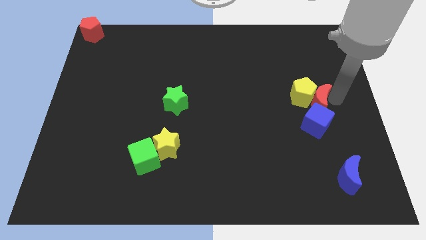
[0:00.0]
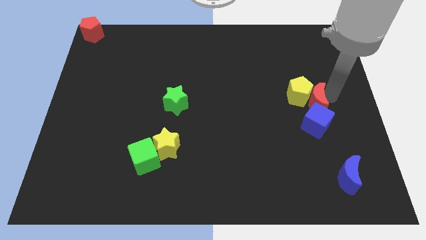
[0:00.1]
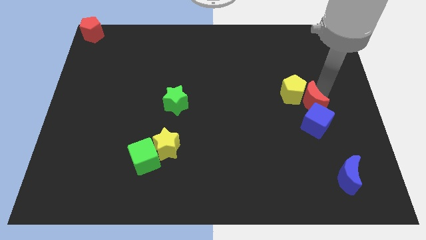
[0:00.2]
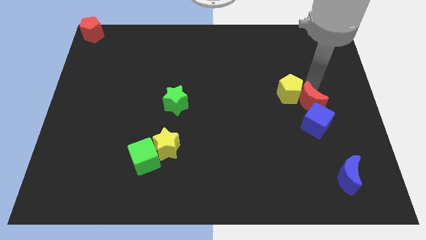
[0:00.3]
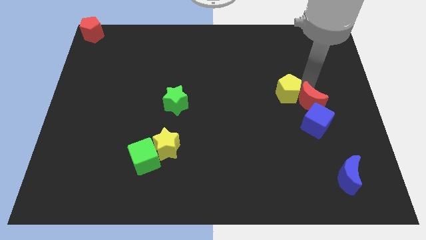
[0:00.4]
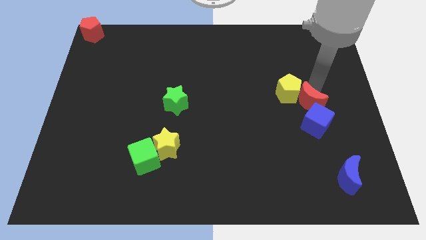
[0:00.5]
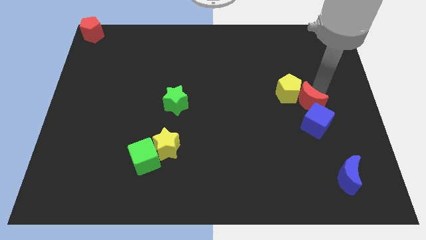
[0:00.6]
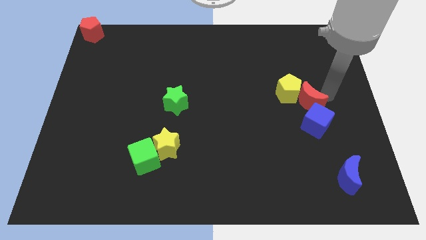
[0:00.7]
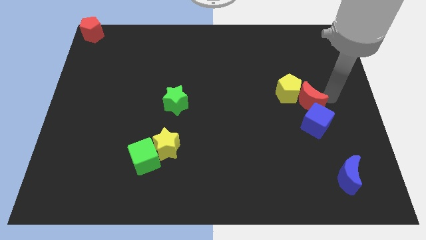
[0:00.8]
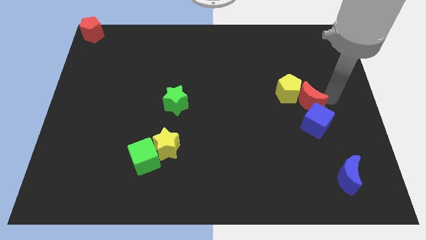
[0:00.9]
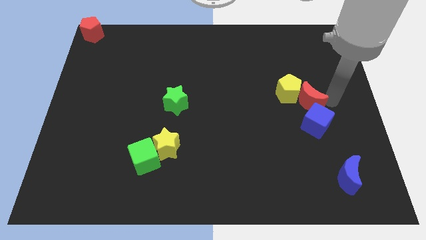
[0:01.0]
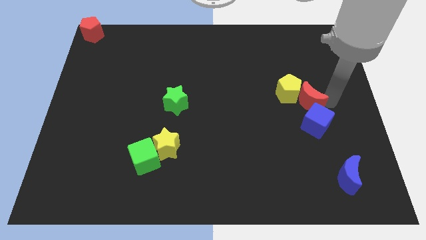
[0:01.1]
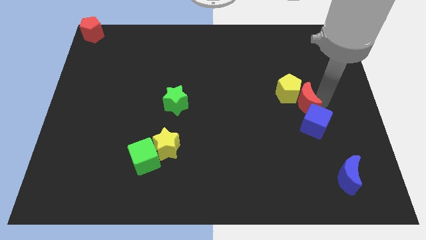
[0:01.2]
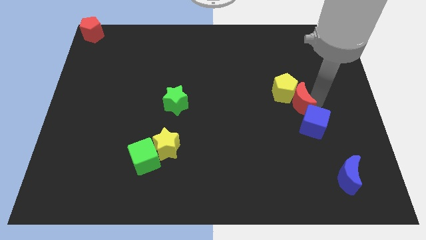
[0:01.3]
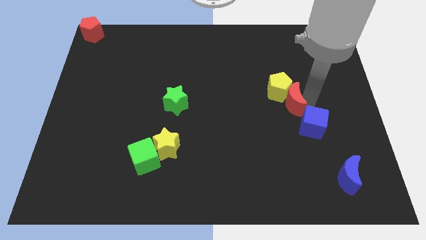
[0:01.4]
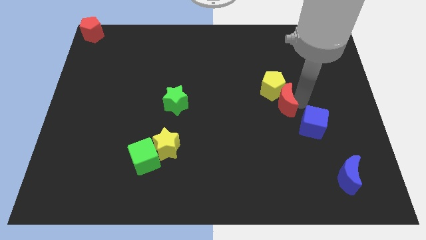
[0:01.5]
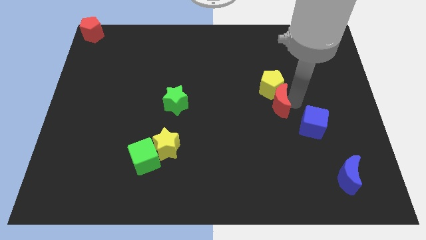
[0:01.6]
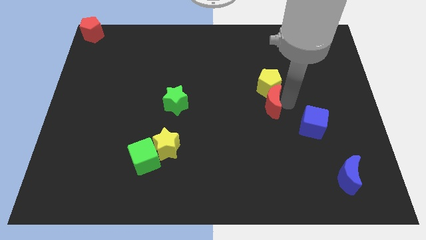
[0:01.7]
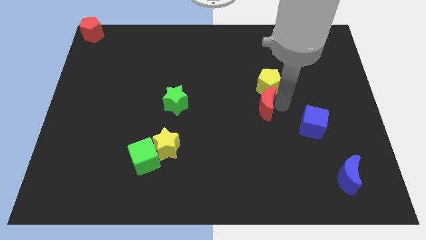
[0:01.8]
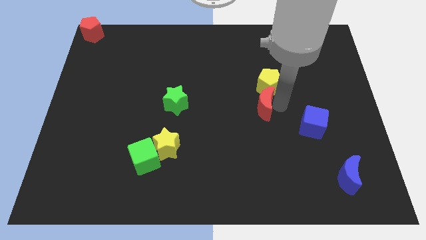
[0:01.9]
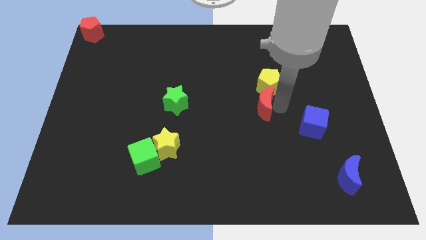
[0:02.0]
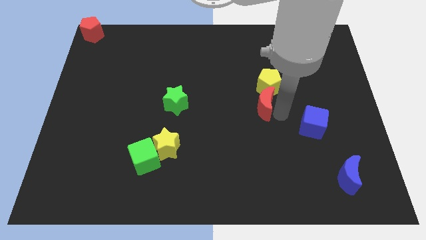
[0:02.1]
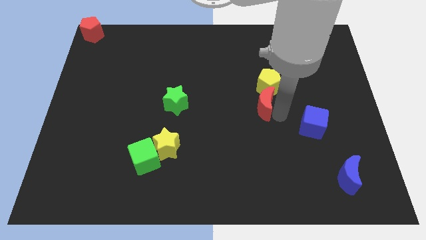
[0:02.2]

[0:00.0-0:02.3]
place red moon to the left of blue cube

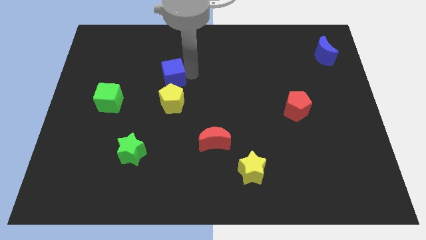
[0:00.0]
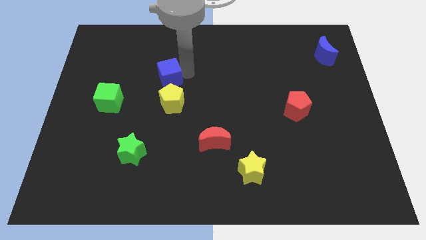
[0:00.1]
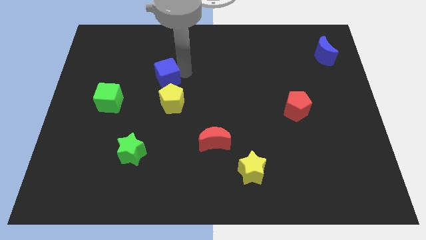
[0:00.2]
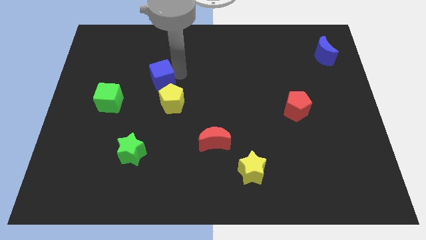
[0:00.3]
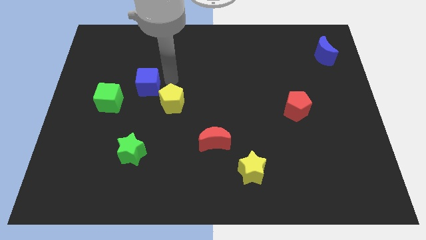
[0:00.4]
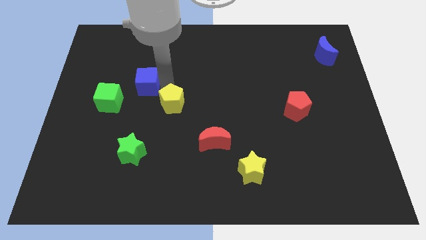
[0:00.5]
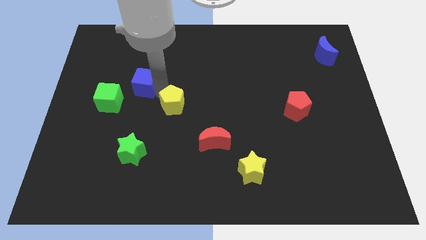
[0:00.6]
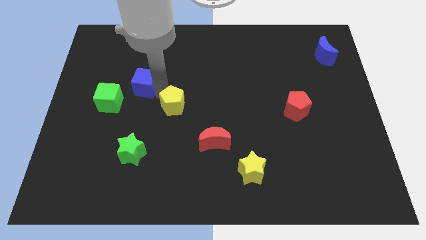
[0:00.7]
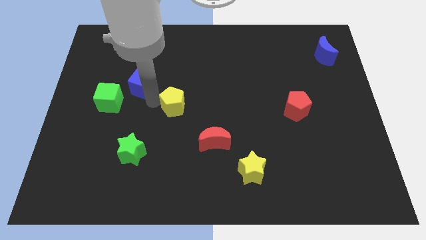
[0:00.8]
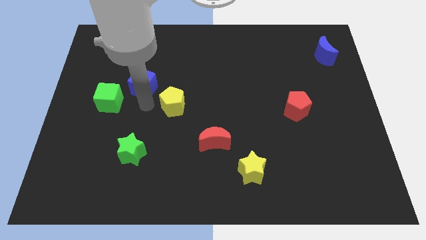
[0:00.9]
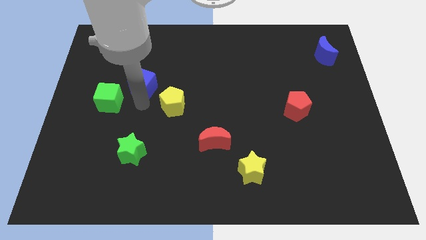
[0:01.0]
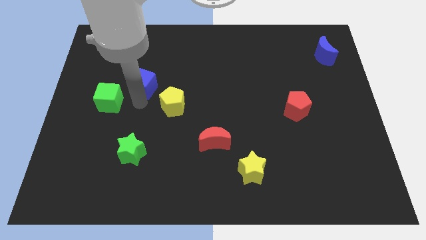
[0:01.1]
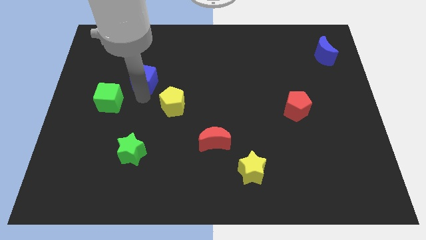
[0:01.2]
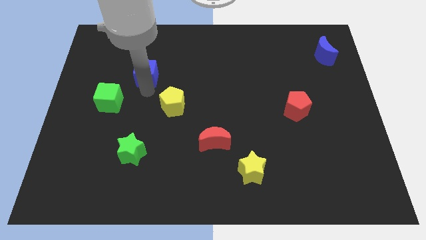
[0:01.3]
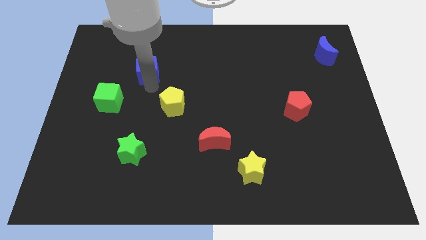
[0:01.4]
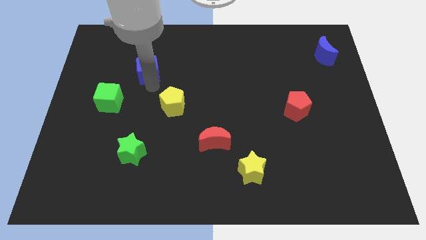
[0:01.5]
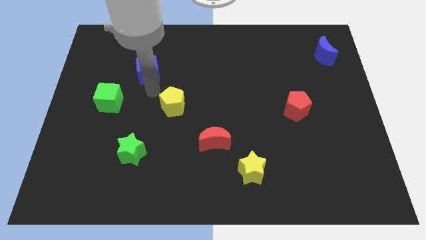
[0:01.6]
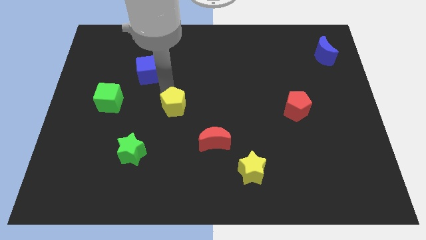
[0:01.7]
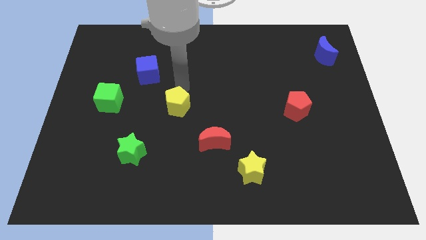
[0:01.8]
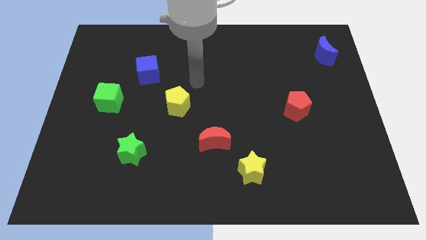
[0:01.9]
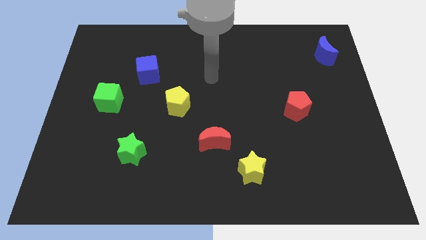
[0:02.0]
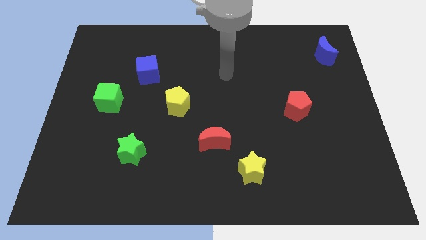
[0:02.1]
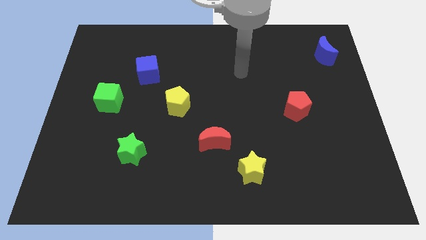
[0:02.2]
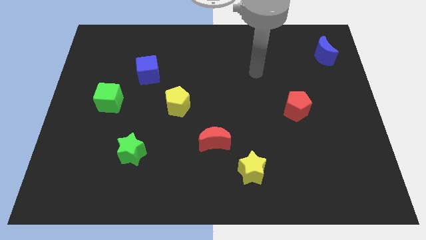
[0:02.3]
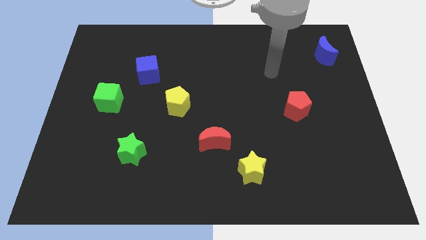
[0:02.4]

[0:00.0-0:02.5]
push blue cube slightly to the left

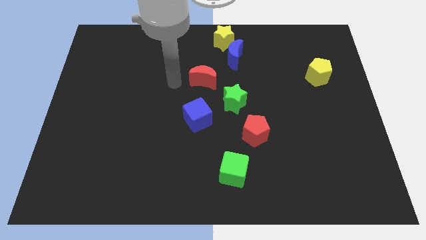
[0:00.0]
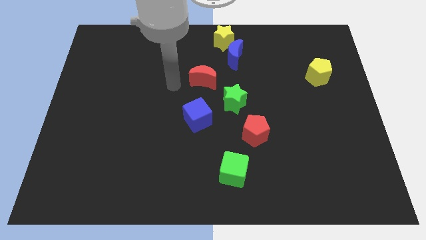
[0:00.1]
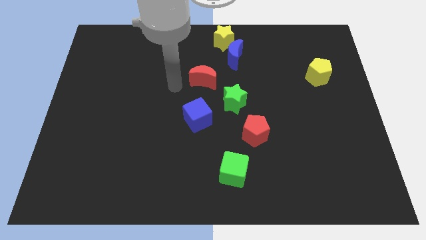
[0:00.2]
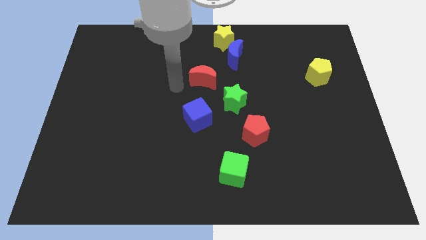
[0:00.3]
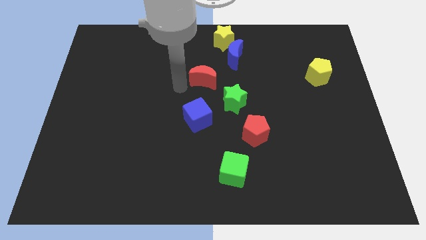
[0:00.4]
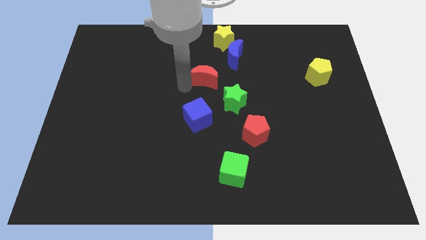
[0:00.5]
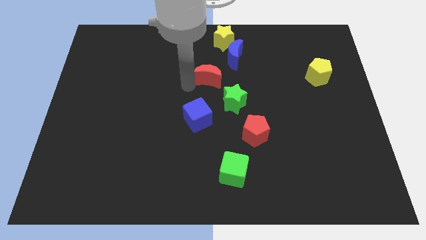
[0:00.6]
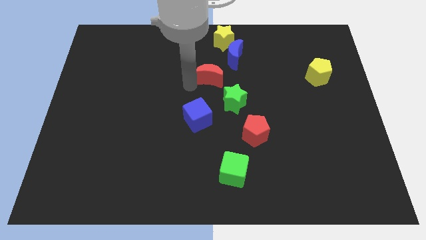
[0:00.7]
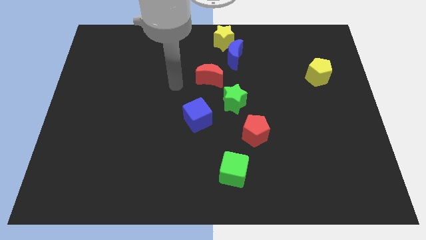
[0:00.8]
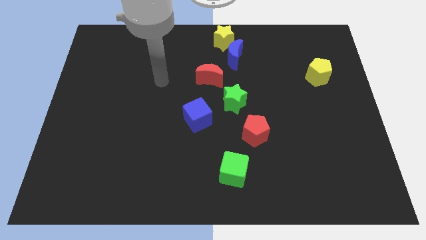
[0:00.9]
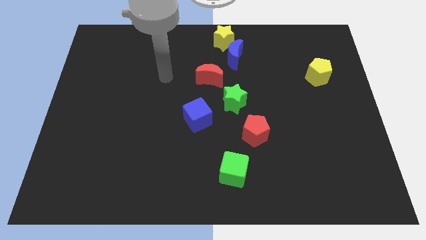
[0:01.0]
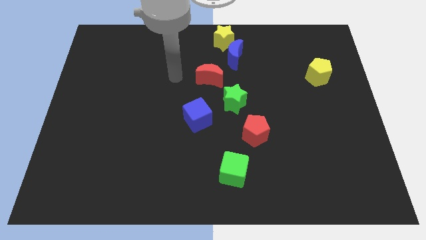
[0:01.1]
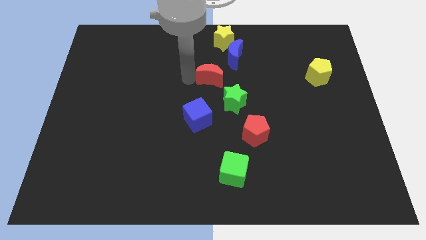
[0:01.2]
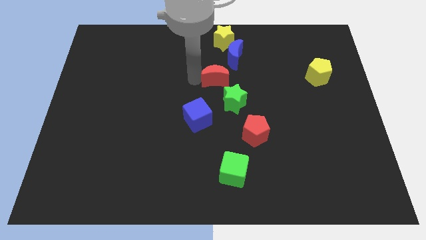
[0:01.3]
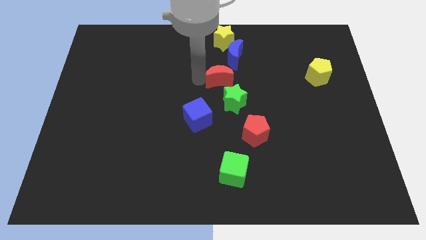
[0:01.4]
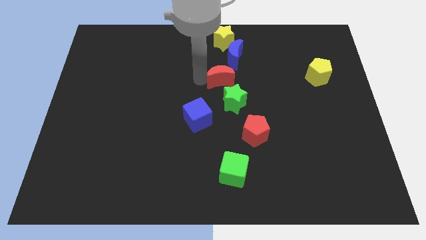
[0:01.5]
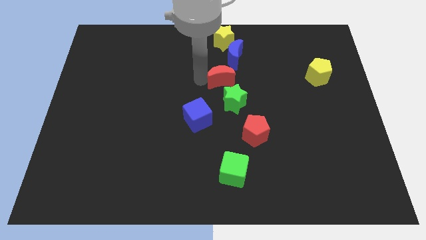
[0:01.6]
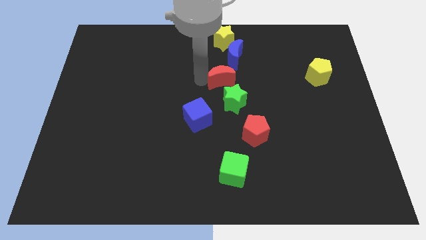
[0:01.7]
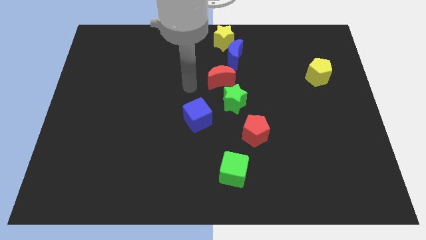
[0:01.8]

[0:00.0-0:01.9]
move the red crecent to the top left side of green star

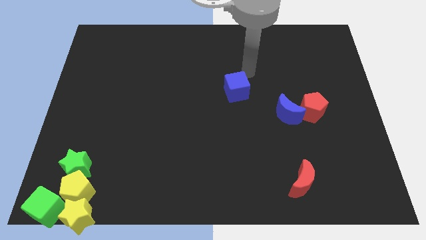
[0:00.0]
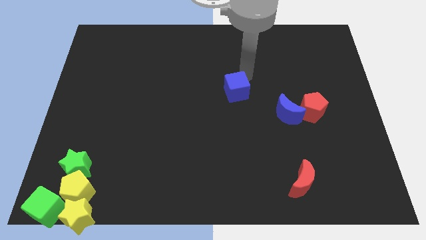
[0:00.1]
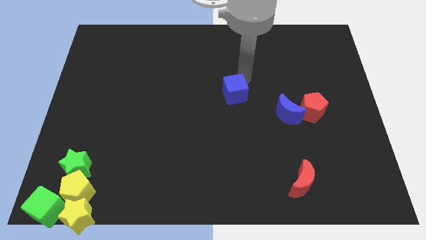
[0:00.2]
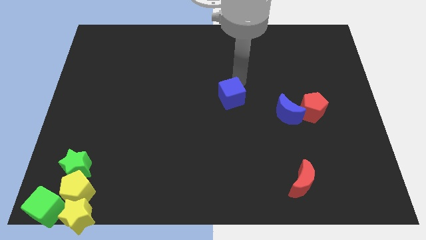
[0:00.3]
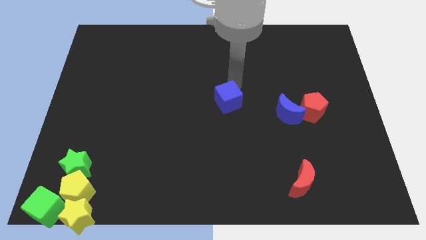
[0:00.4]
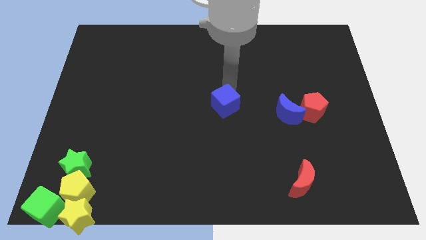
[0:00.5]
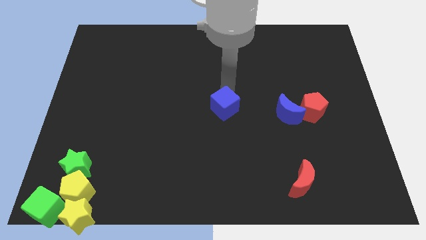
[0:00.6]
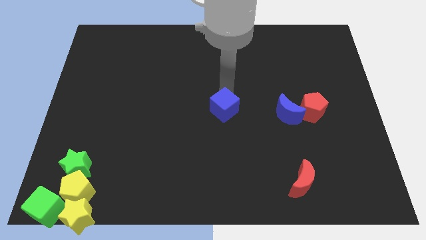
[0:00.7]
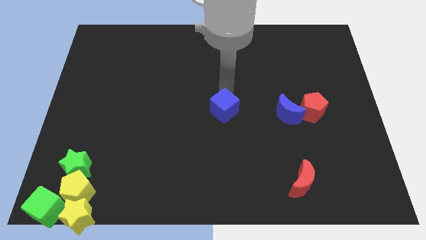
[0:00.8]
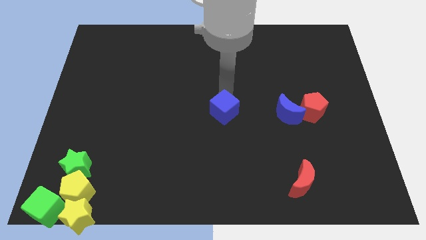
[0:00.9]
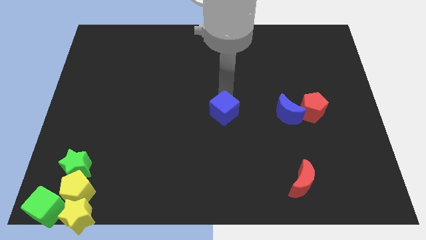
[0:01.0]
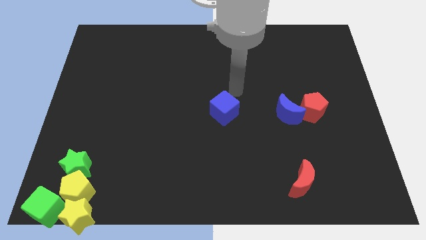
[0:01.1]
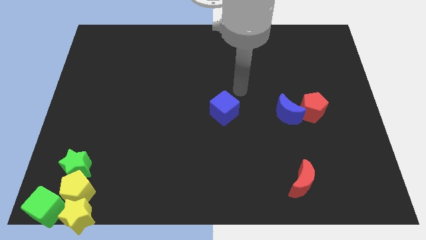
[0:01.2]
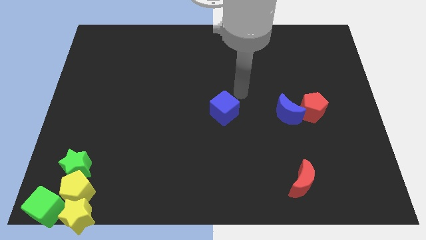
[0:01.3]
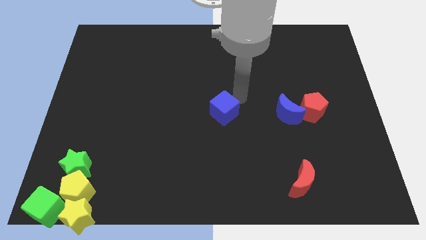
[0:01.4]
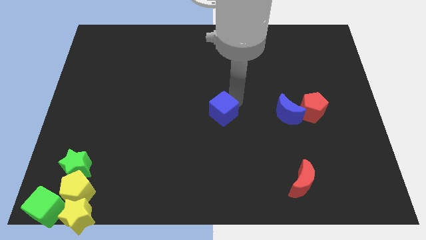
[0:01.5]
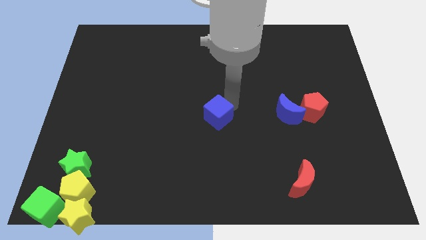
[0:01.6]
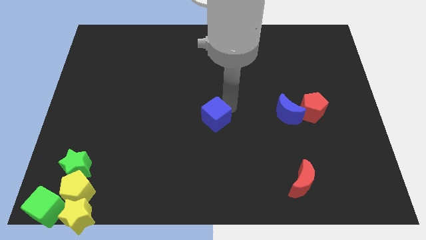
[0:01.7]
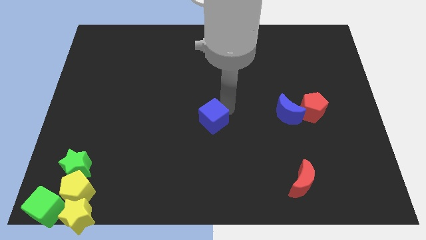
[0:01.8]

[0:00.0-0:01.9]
move the blue cube to the center of the board

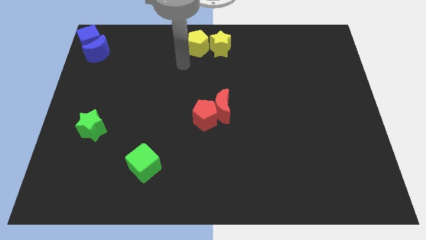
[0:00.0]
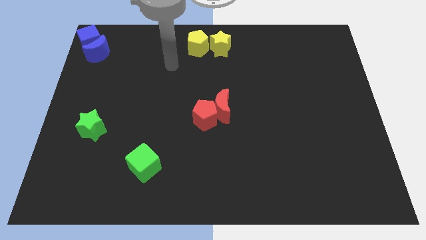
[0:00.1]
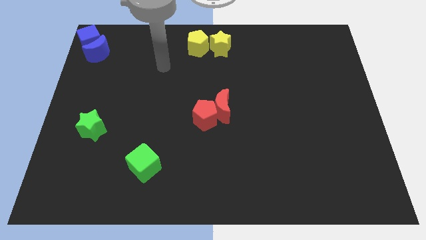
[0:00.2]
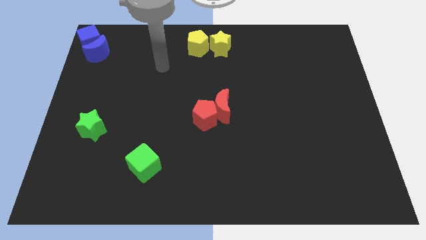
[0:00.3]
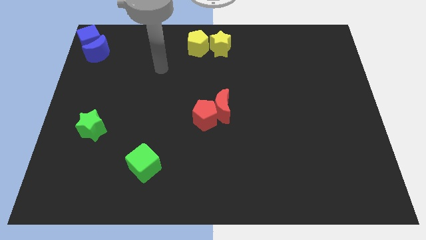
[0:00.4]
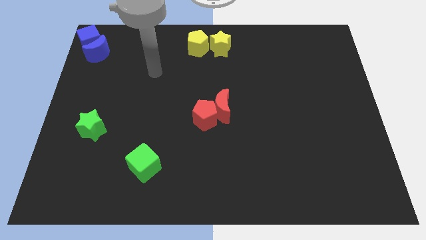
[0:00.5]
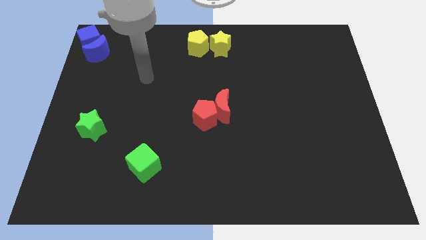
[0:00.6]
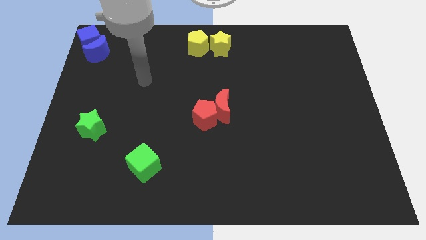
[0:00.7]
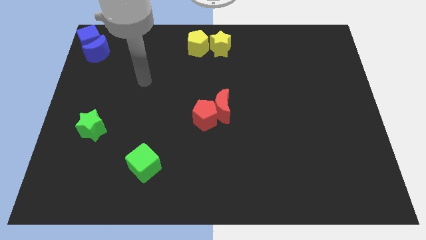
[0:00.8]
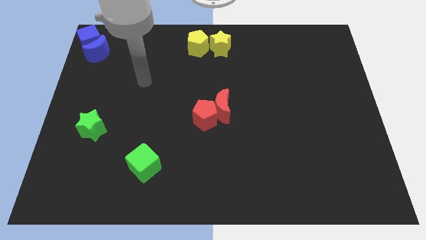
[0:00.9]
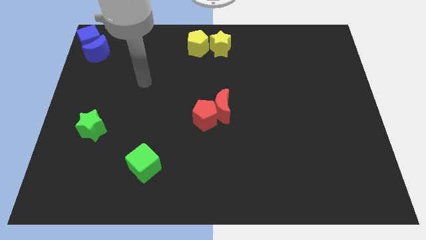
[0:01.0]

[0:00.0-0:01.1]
point your hand vertically above green cube
